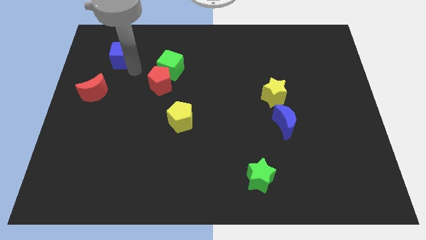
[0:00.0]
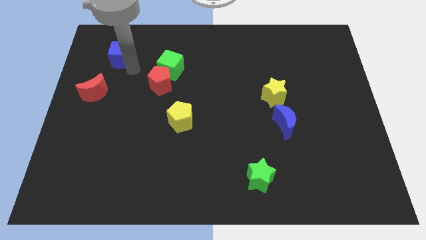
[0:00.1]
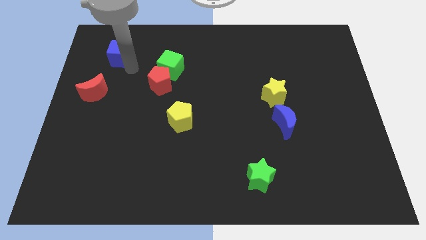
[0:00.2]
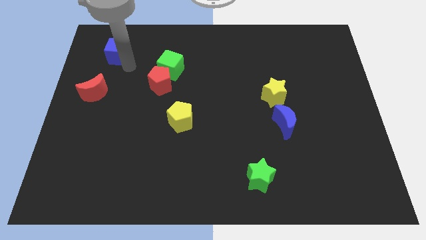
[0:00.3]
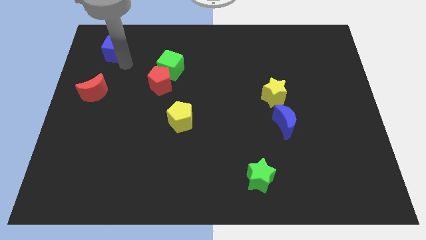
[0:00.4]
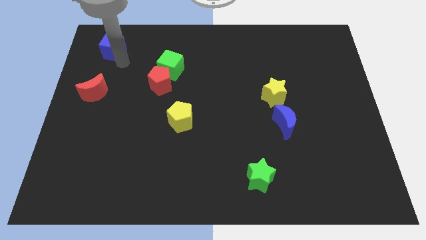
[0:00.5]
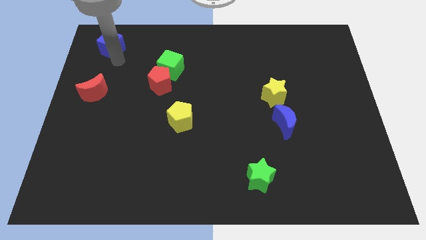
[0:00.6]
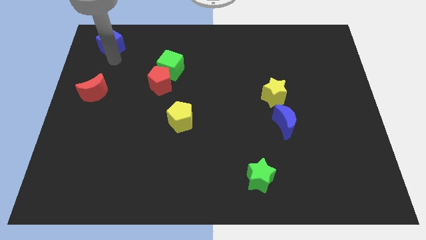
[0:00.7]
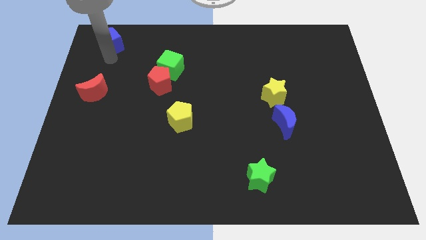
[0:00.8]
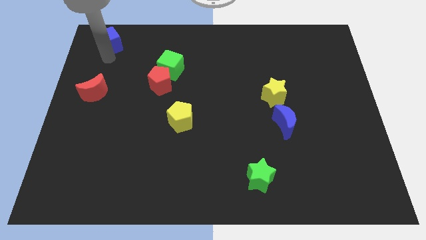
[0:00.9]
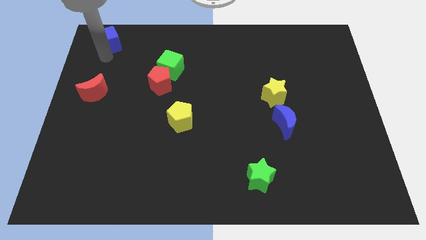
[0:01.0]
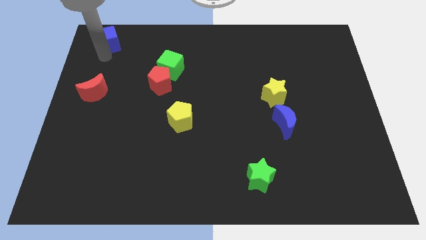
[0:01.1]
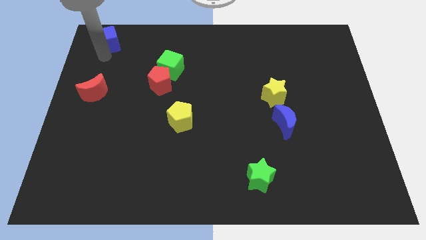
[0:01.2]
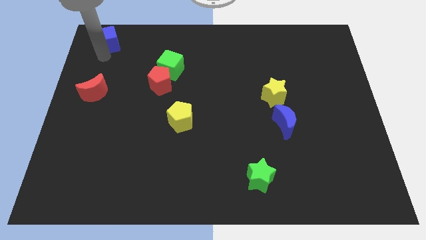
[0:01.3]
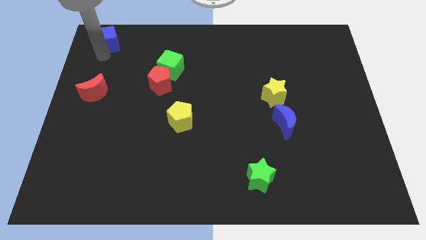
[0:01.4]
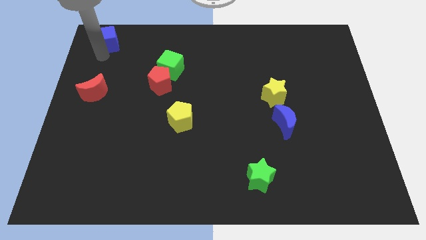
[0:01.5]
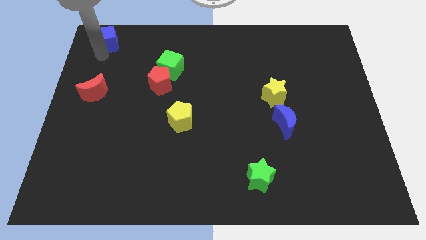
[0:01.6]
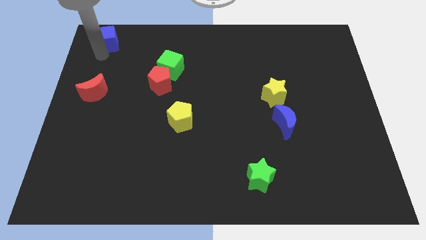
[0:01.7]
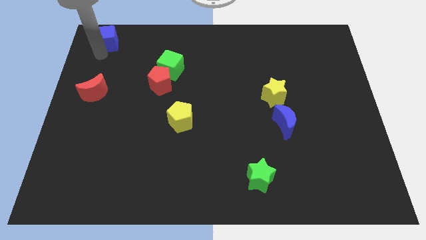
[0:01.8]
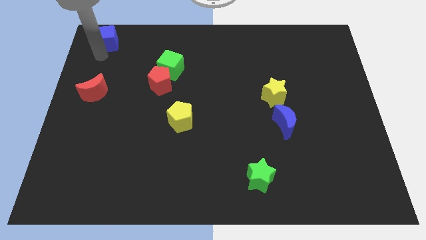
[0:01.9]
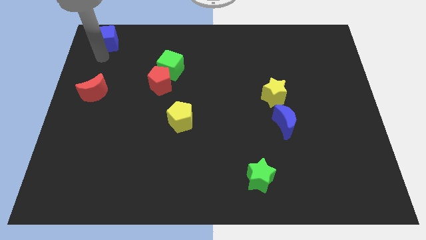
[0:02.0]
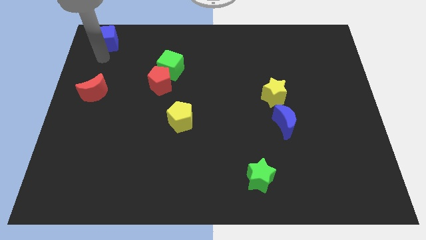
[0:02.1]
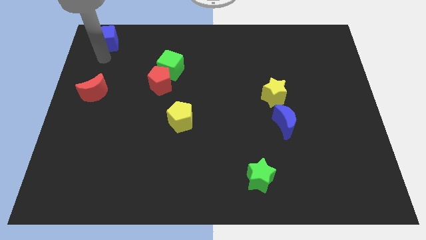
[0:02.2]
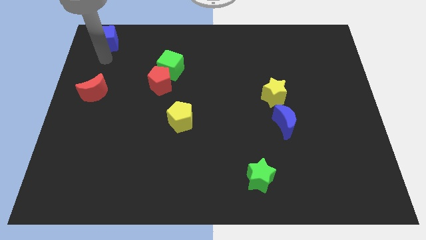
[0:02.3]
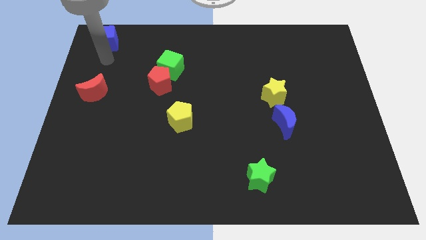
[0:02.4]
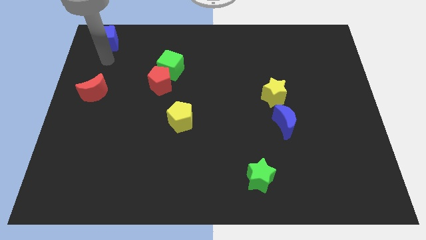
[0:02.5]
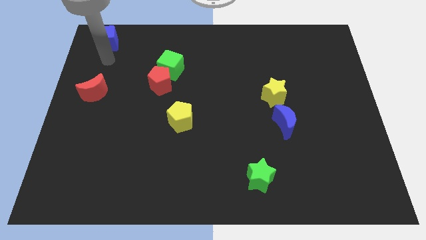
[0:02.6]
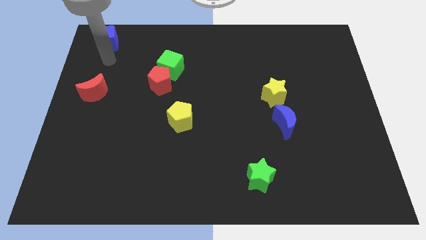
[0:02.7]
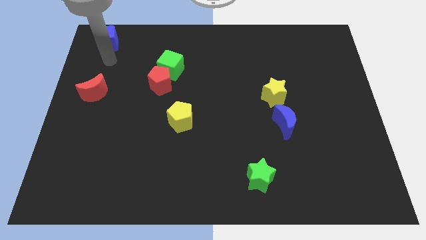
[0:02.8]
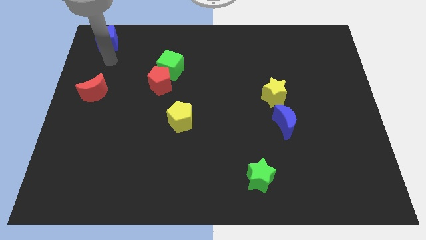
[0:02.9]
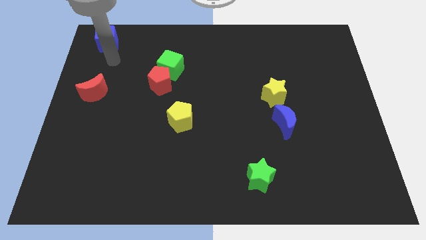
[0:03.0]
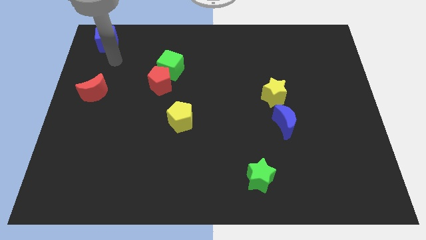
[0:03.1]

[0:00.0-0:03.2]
push the blue cube towards the top left of the board

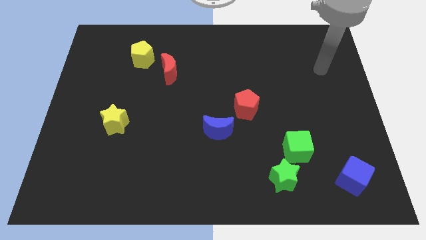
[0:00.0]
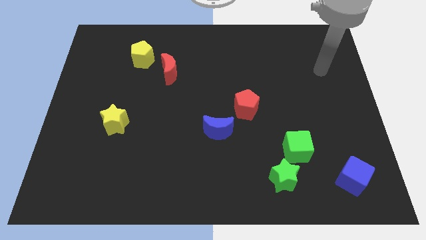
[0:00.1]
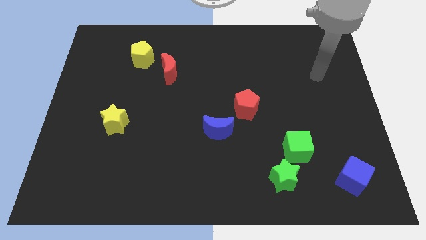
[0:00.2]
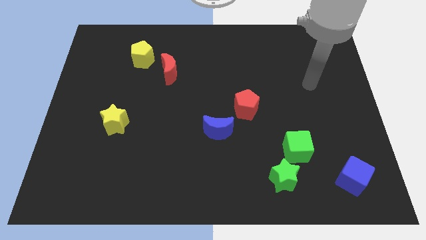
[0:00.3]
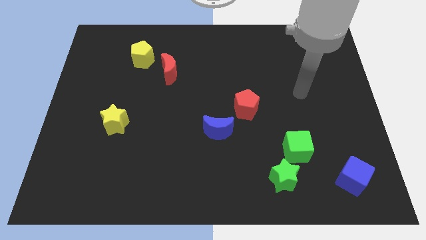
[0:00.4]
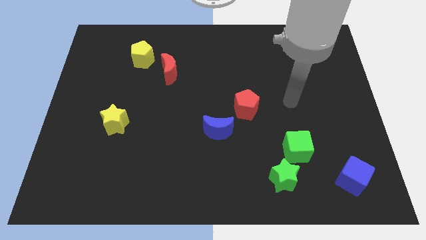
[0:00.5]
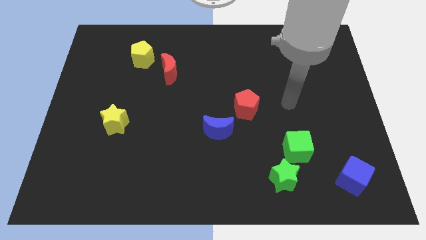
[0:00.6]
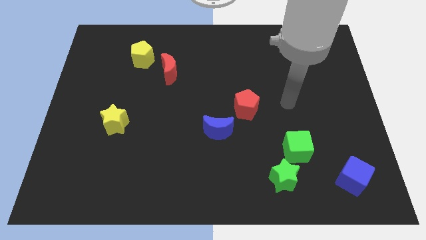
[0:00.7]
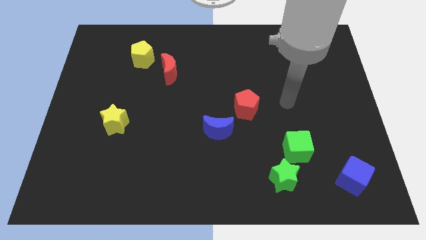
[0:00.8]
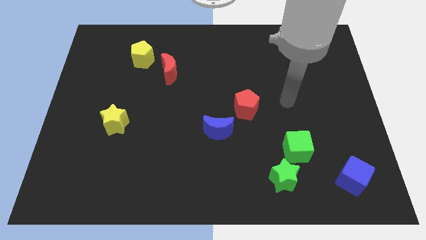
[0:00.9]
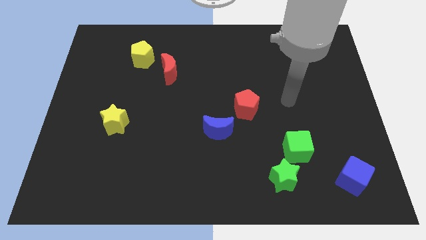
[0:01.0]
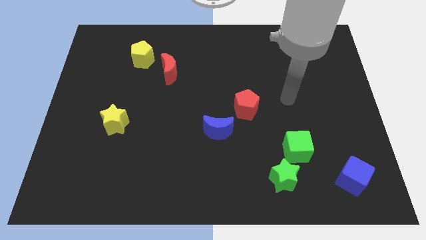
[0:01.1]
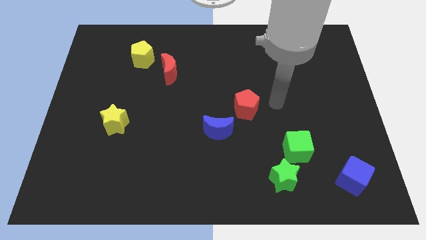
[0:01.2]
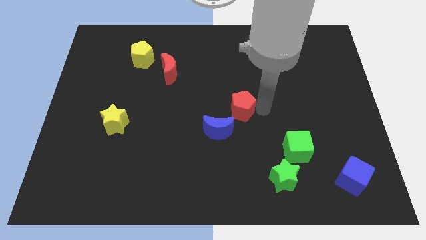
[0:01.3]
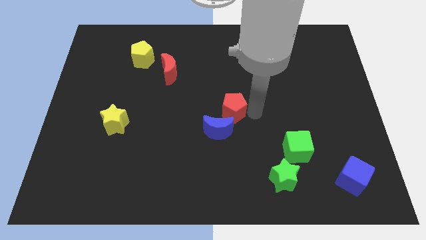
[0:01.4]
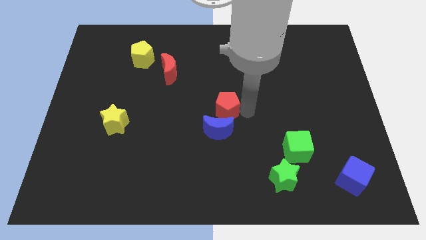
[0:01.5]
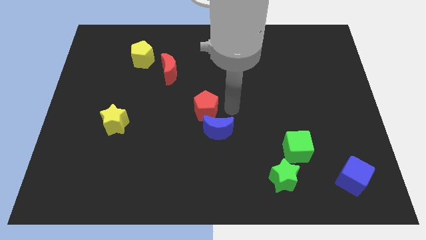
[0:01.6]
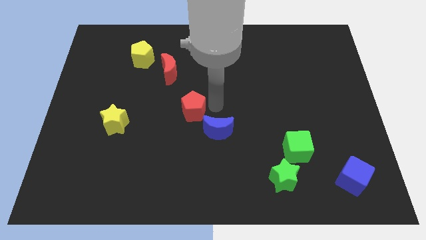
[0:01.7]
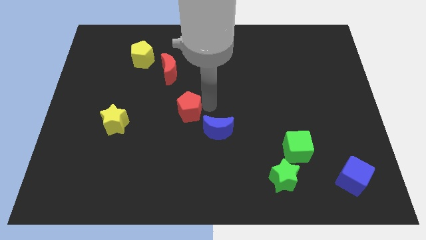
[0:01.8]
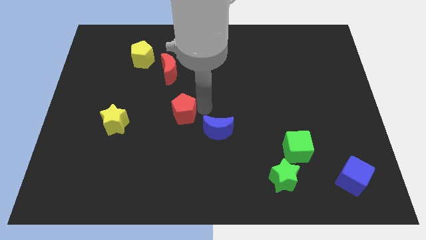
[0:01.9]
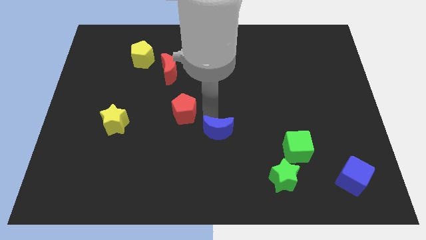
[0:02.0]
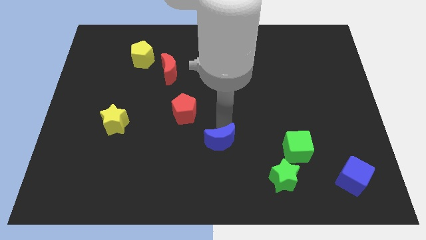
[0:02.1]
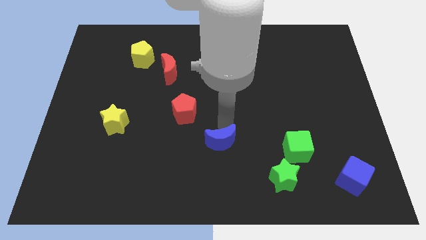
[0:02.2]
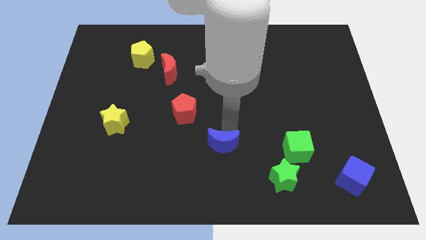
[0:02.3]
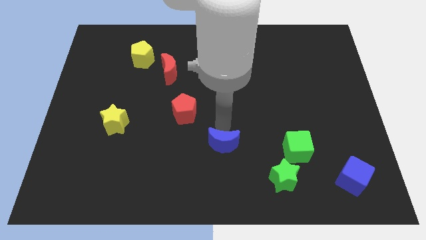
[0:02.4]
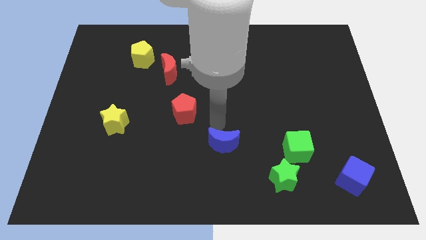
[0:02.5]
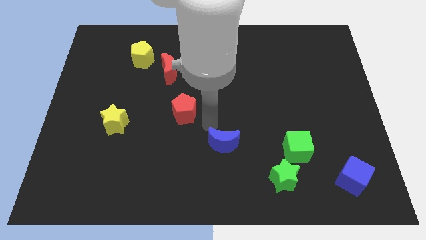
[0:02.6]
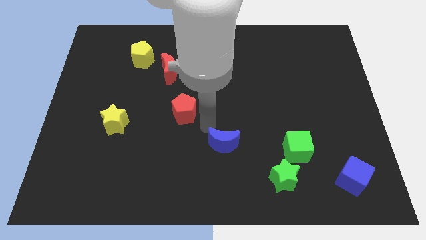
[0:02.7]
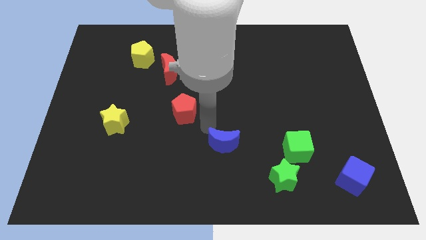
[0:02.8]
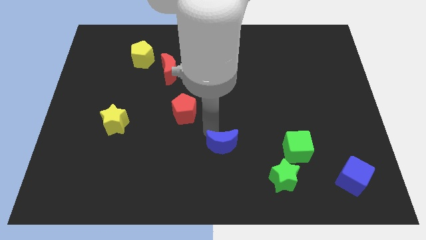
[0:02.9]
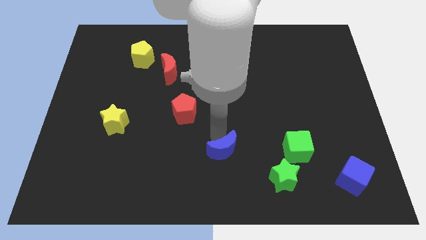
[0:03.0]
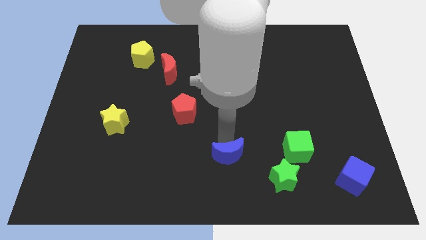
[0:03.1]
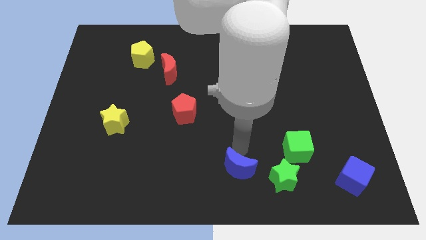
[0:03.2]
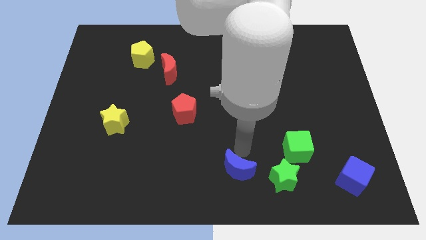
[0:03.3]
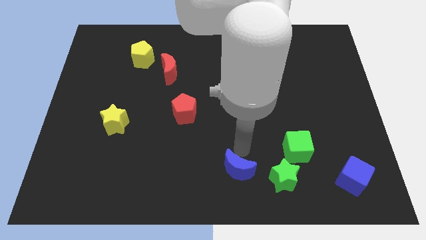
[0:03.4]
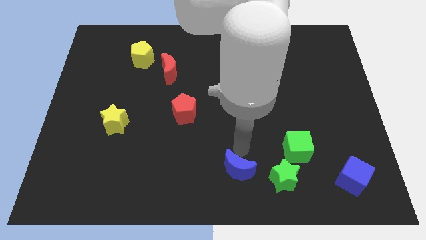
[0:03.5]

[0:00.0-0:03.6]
place the blue crescent to the left of the green star

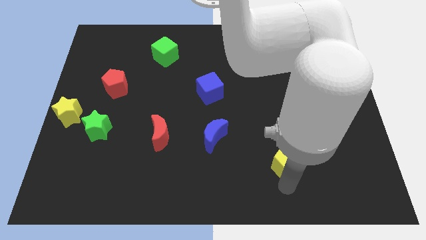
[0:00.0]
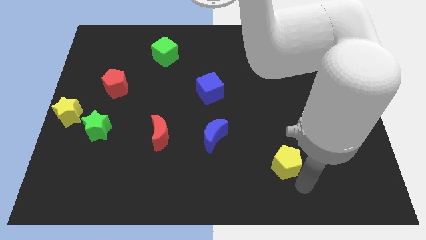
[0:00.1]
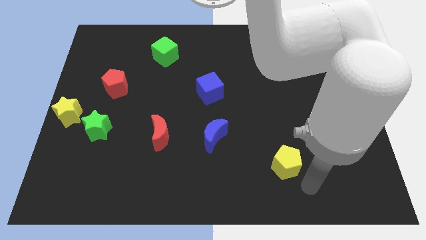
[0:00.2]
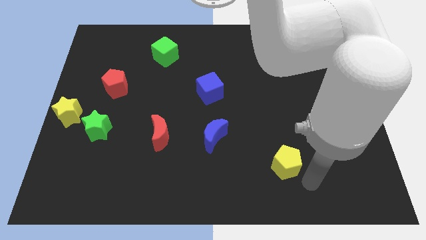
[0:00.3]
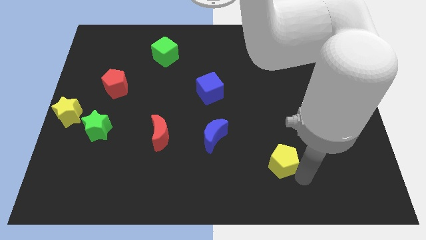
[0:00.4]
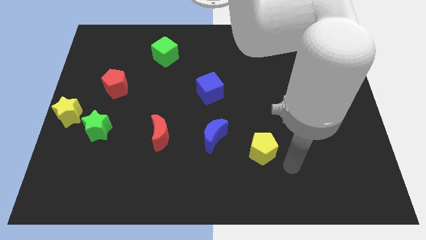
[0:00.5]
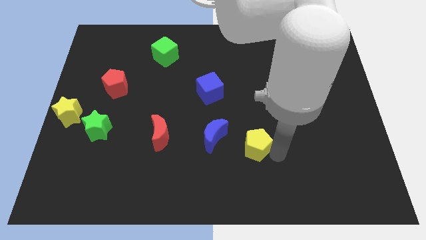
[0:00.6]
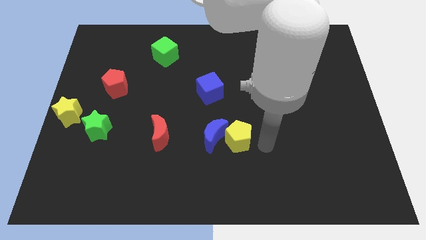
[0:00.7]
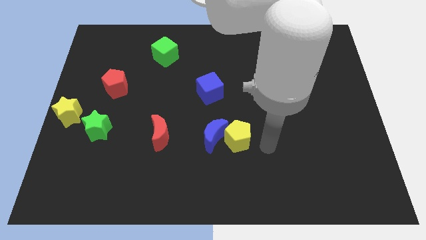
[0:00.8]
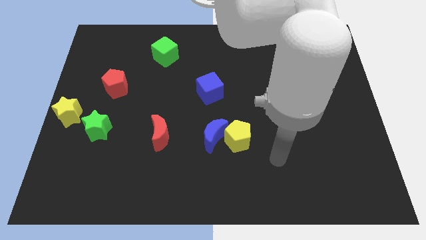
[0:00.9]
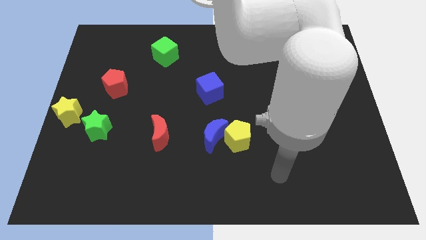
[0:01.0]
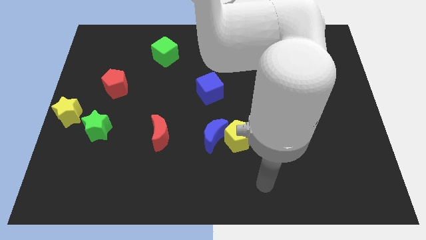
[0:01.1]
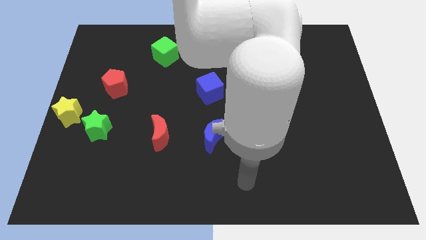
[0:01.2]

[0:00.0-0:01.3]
move the yellow pentagon into the blue moon

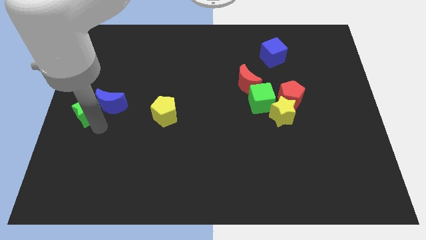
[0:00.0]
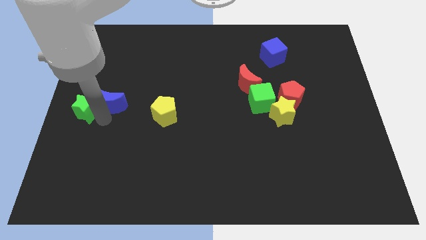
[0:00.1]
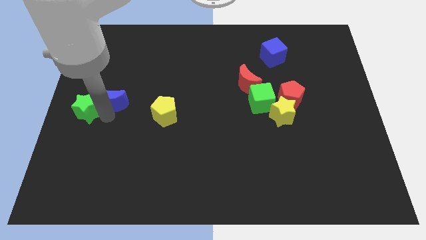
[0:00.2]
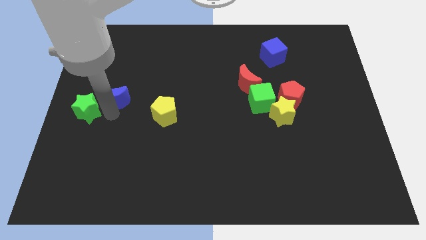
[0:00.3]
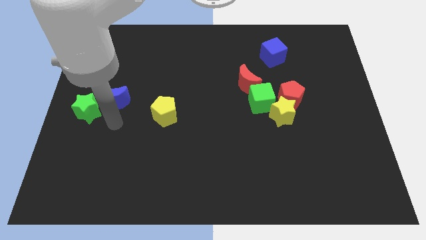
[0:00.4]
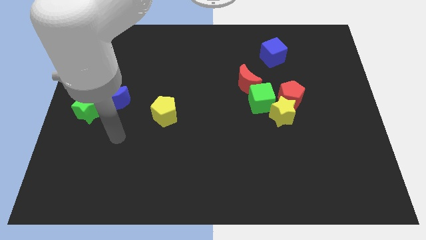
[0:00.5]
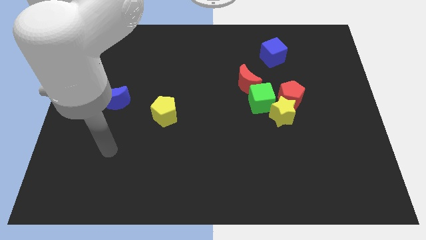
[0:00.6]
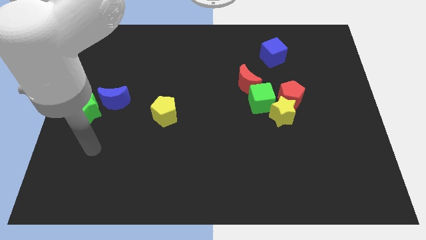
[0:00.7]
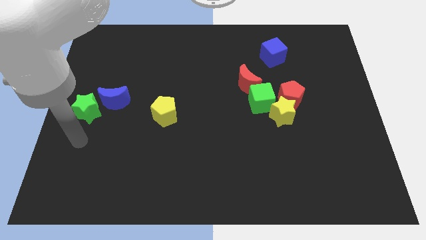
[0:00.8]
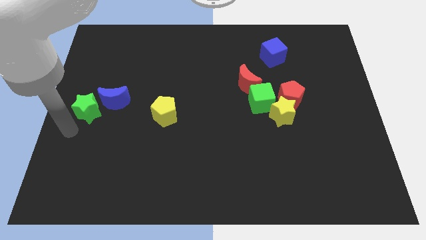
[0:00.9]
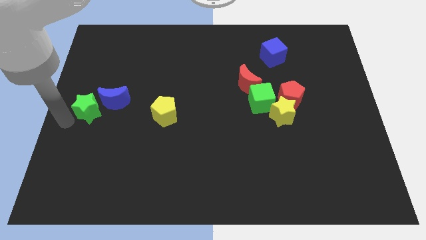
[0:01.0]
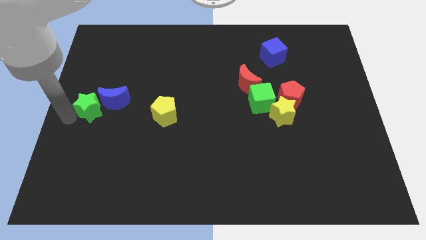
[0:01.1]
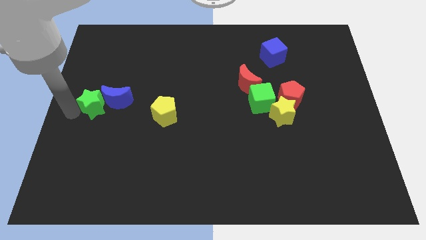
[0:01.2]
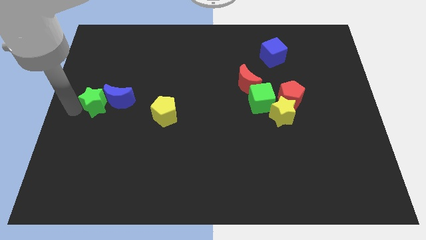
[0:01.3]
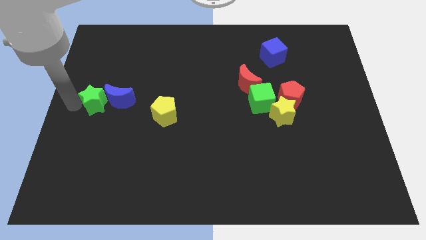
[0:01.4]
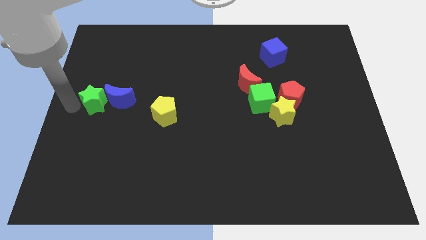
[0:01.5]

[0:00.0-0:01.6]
place green star to the left of blue moon
